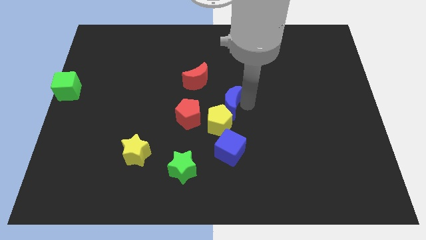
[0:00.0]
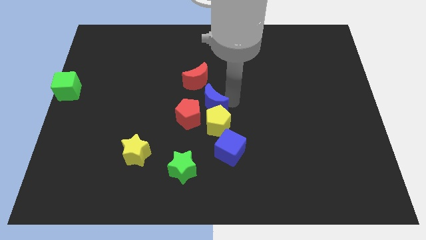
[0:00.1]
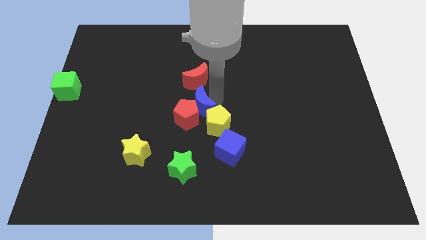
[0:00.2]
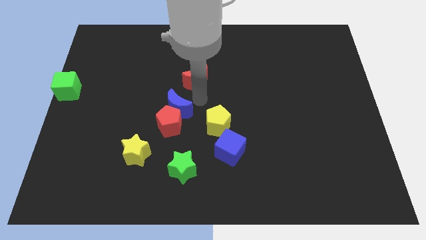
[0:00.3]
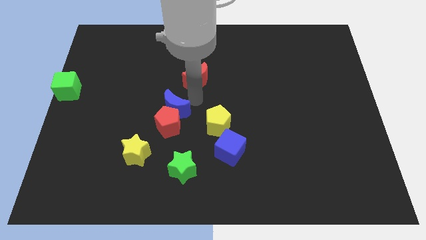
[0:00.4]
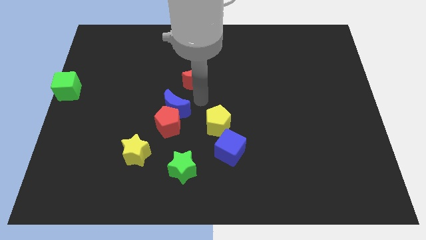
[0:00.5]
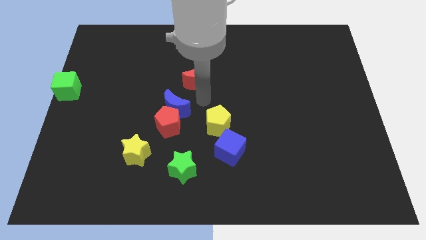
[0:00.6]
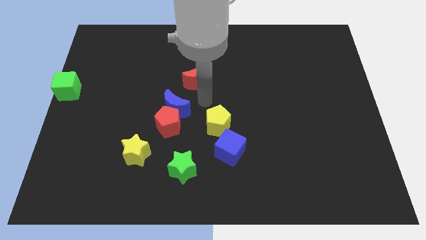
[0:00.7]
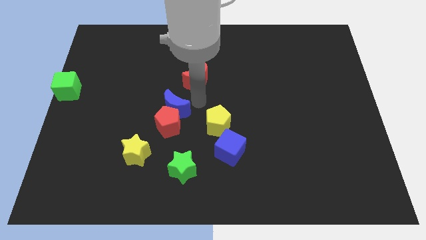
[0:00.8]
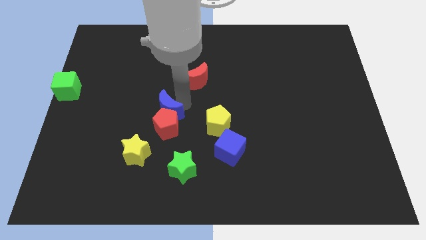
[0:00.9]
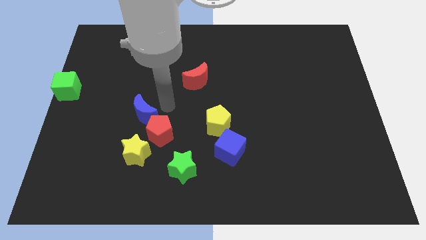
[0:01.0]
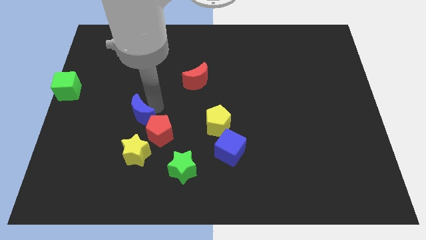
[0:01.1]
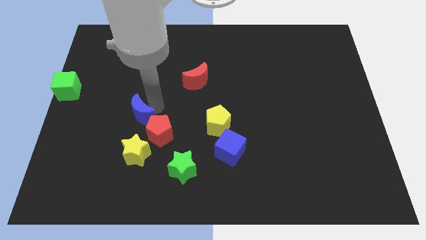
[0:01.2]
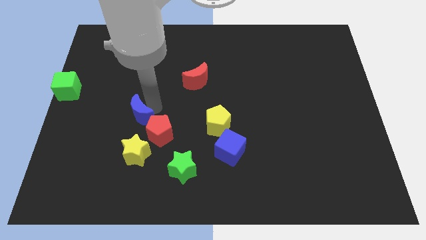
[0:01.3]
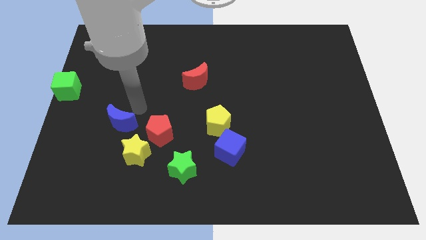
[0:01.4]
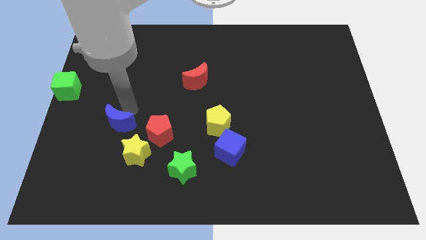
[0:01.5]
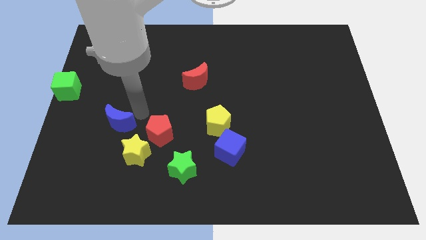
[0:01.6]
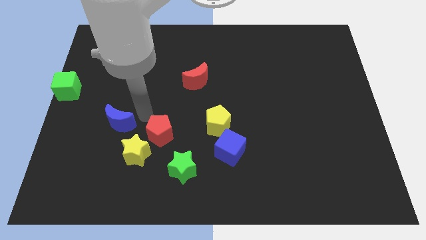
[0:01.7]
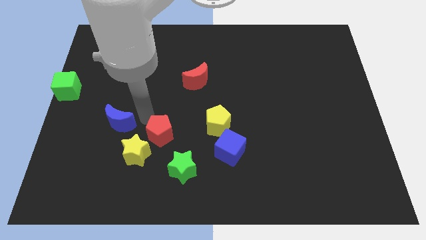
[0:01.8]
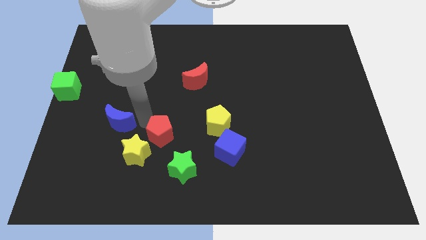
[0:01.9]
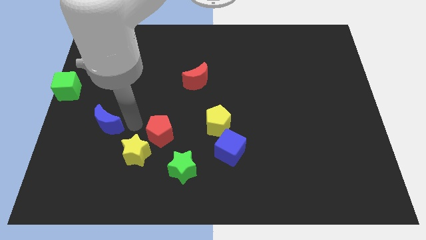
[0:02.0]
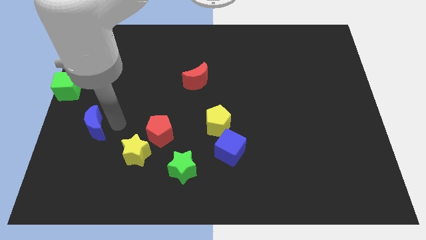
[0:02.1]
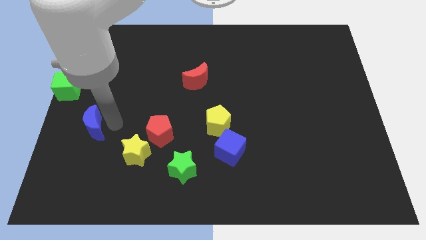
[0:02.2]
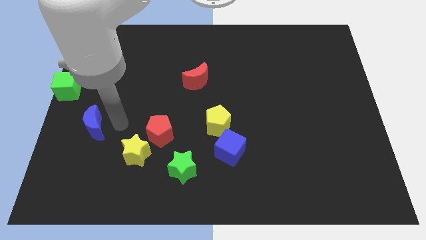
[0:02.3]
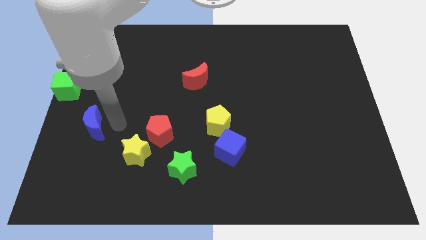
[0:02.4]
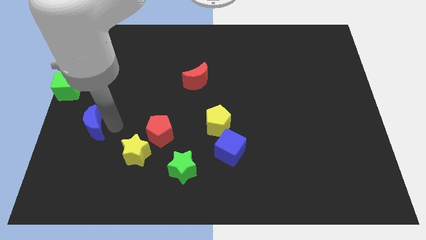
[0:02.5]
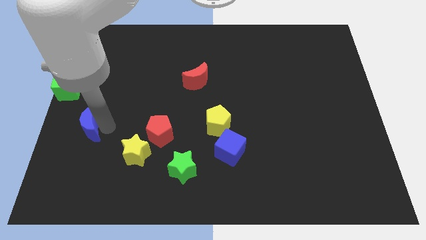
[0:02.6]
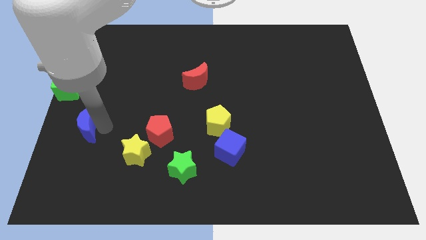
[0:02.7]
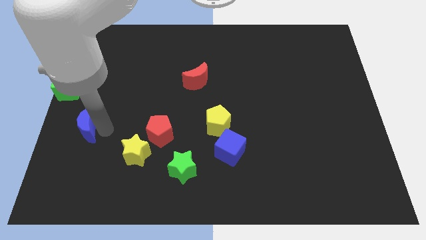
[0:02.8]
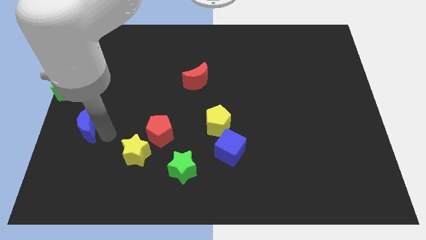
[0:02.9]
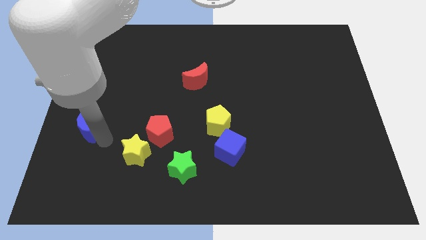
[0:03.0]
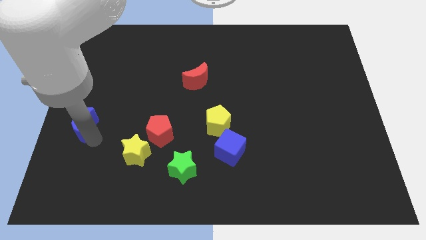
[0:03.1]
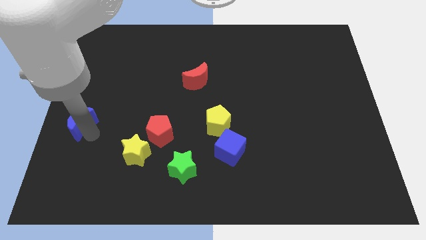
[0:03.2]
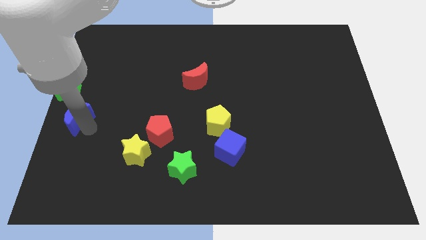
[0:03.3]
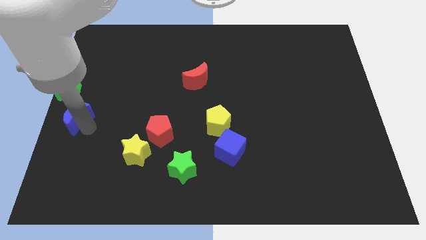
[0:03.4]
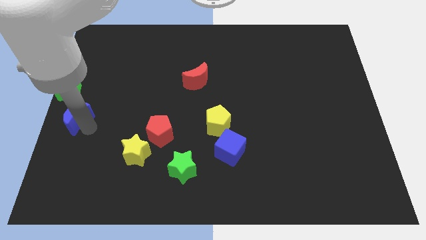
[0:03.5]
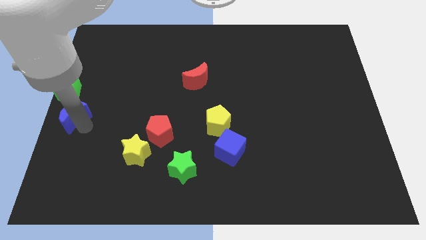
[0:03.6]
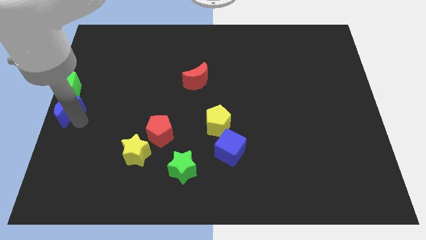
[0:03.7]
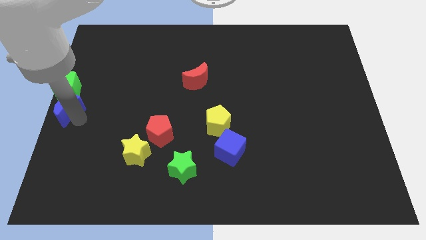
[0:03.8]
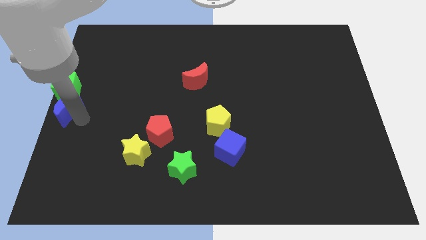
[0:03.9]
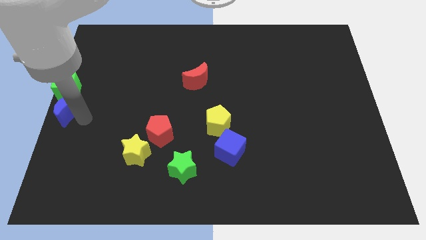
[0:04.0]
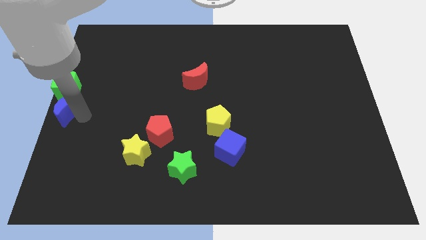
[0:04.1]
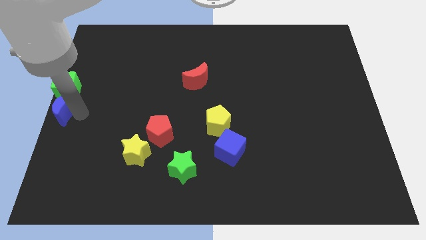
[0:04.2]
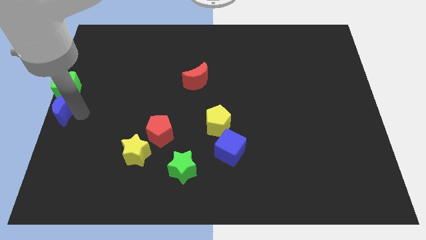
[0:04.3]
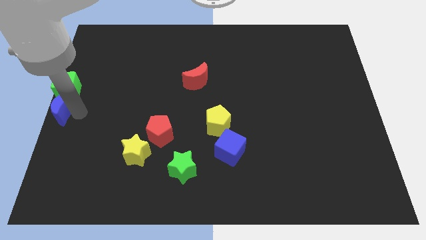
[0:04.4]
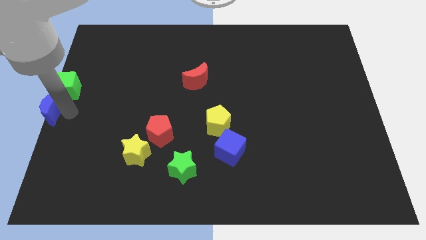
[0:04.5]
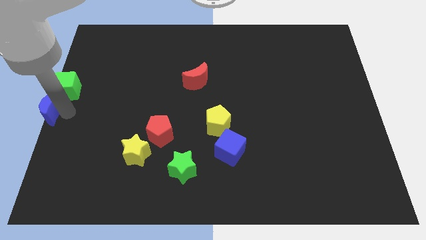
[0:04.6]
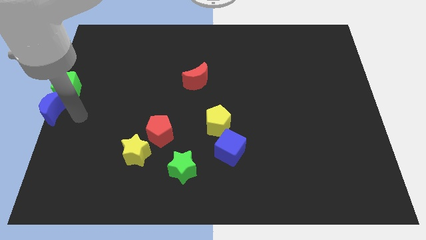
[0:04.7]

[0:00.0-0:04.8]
move the blue crescent below the green cube

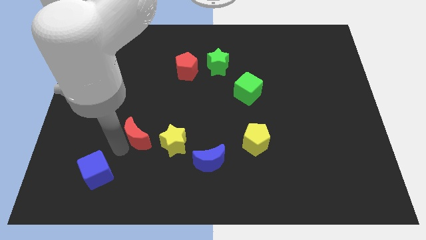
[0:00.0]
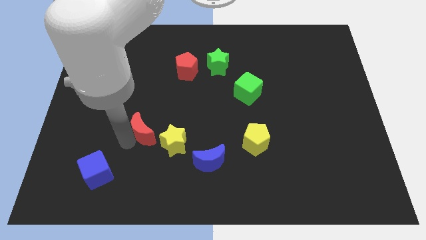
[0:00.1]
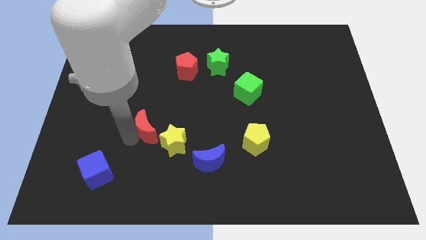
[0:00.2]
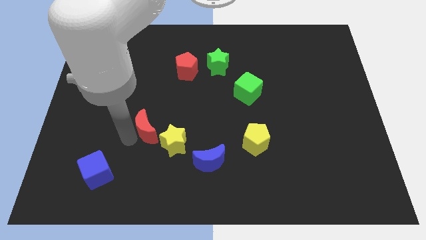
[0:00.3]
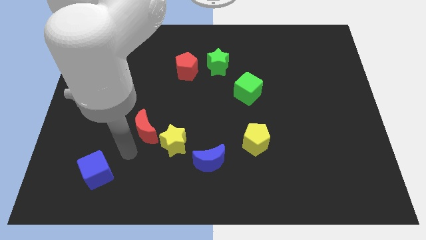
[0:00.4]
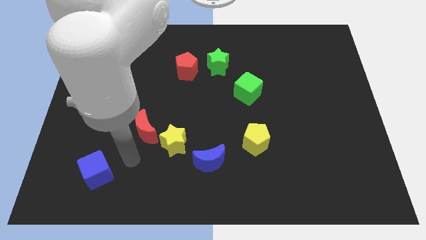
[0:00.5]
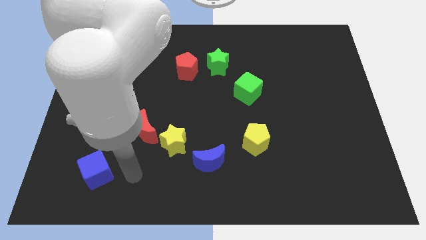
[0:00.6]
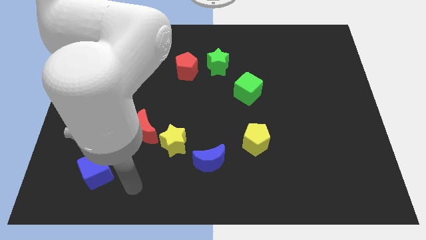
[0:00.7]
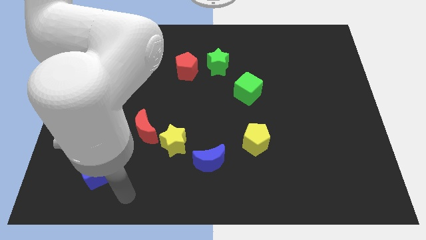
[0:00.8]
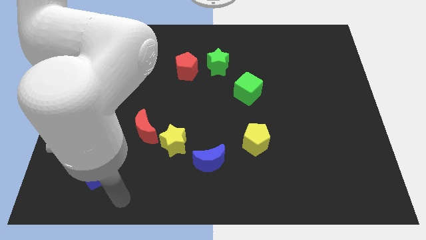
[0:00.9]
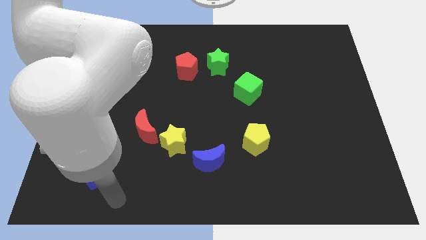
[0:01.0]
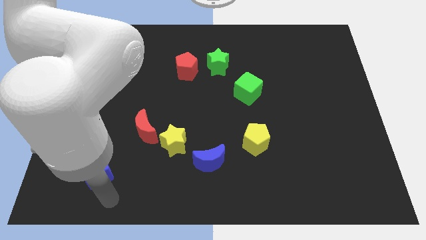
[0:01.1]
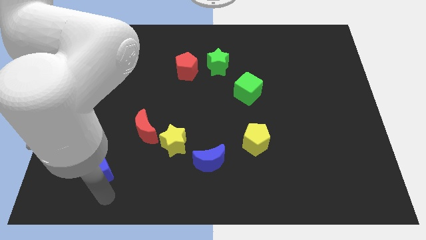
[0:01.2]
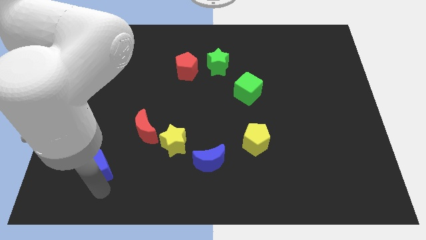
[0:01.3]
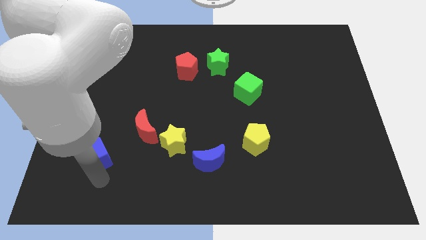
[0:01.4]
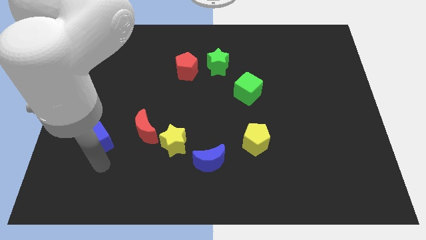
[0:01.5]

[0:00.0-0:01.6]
push the blue cube to the left of the red moon

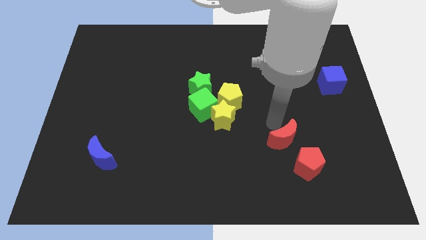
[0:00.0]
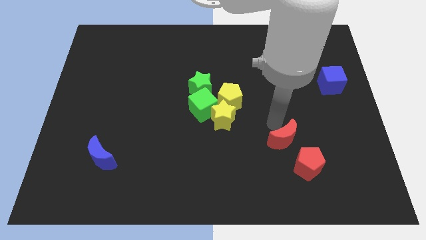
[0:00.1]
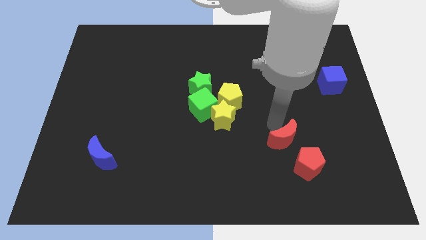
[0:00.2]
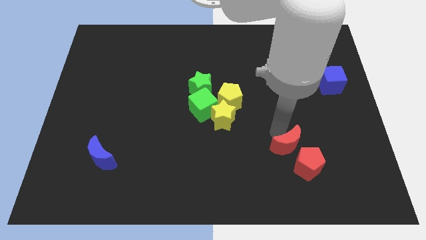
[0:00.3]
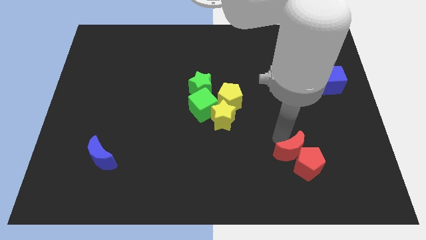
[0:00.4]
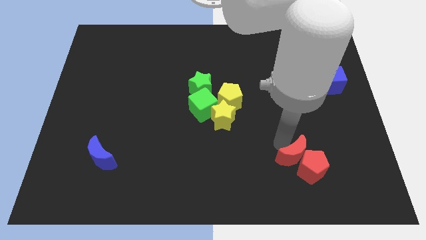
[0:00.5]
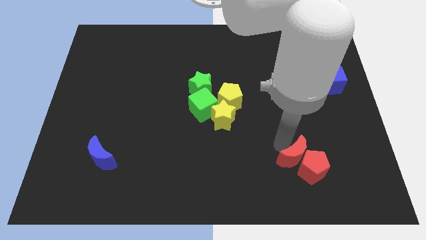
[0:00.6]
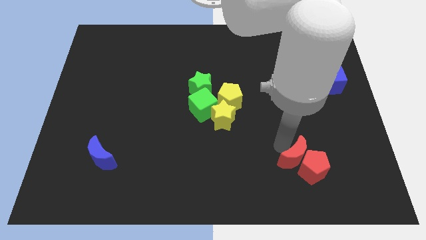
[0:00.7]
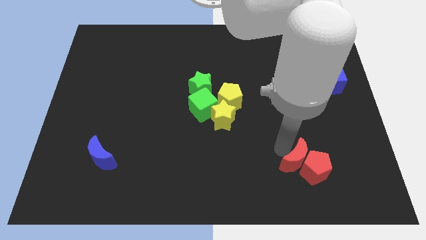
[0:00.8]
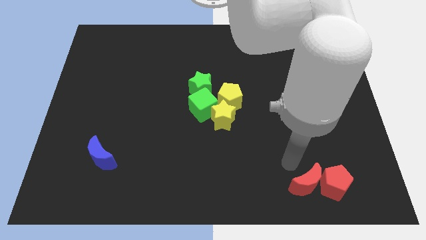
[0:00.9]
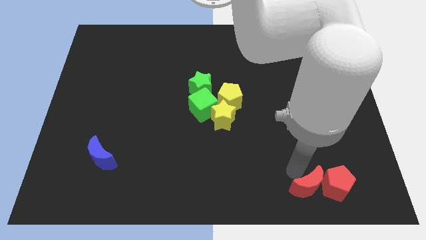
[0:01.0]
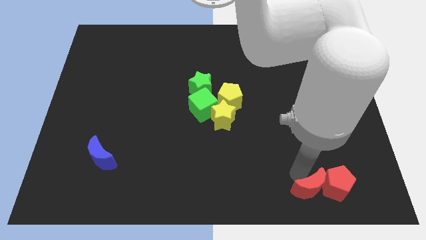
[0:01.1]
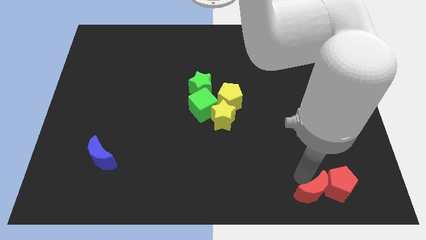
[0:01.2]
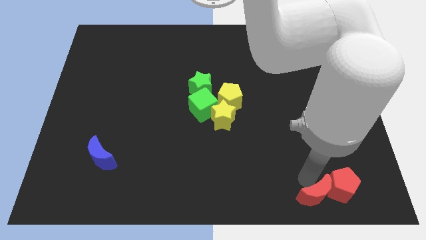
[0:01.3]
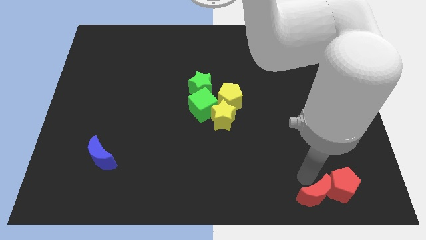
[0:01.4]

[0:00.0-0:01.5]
push the red crescent with red pentagon to the bottom of the board

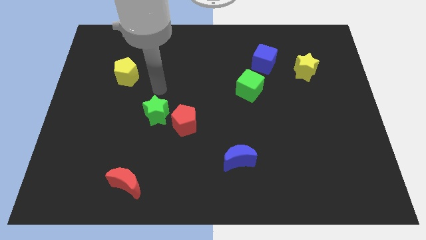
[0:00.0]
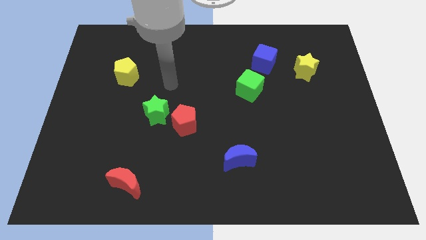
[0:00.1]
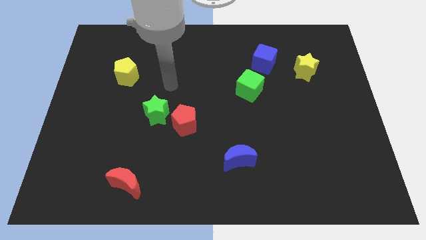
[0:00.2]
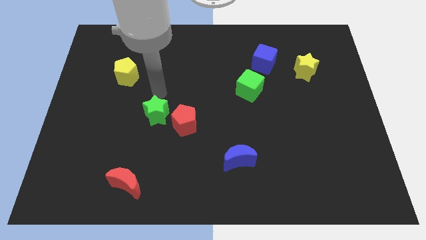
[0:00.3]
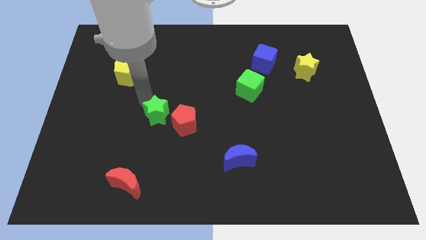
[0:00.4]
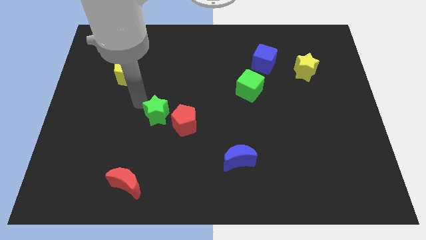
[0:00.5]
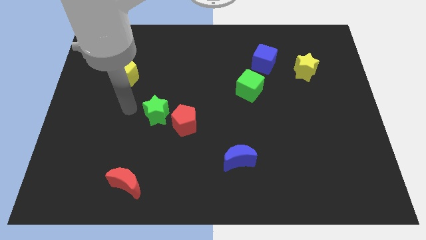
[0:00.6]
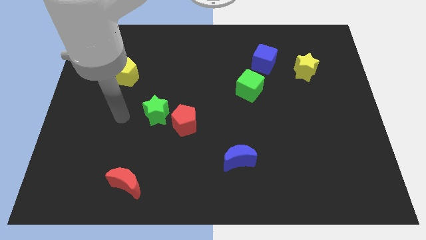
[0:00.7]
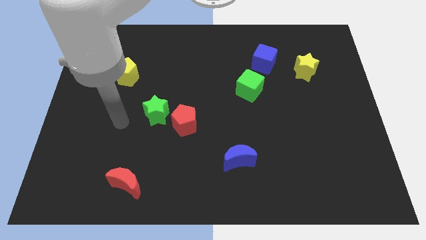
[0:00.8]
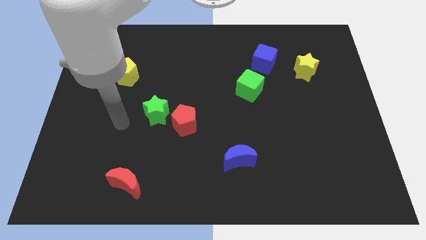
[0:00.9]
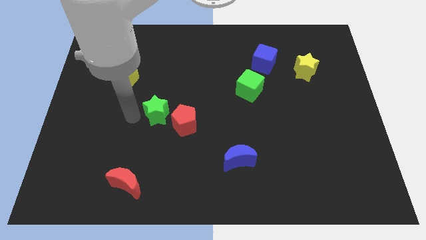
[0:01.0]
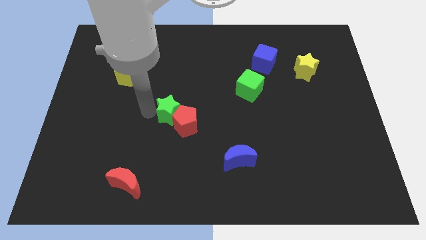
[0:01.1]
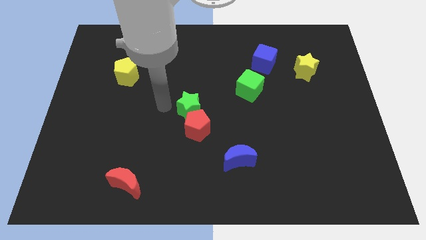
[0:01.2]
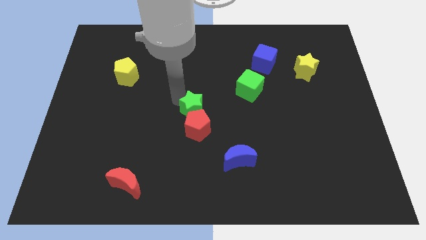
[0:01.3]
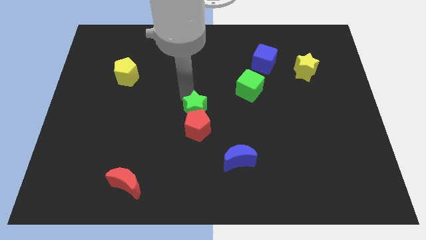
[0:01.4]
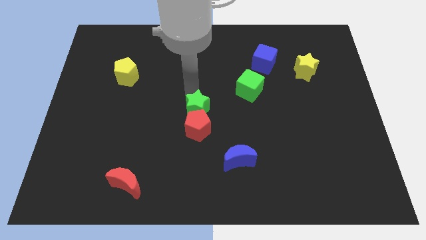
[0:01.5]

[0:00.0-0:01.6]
move the green star to the top of the red pentagon
